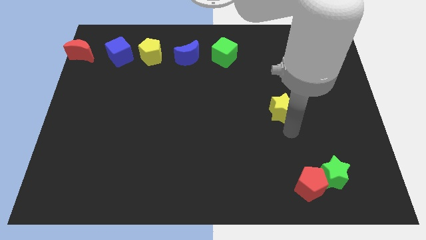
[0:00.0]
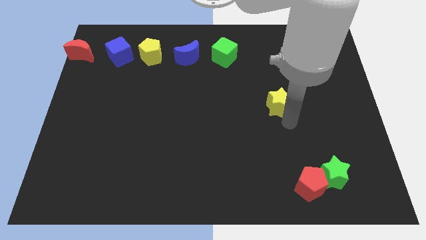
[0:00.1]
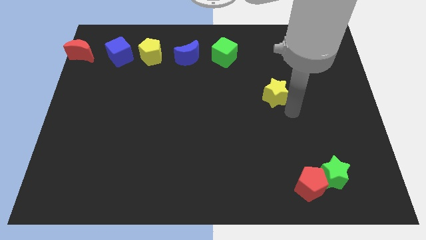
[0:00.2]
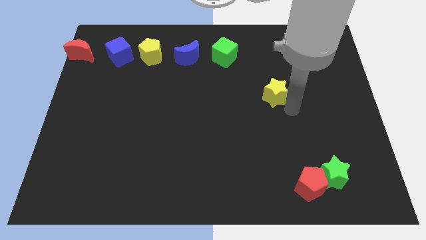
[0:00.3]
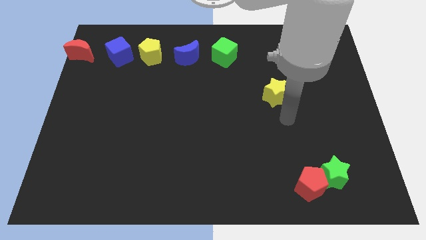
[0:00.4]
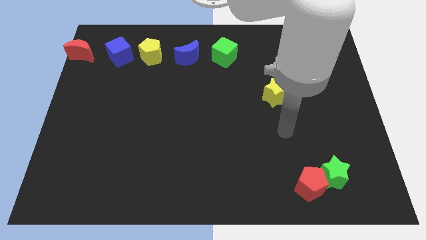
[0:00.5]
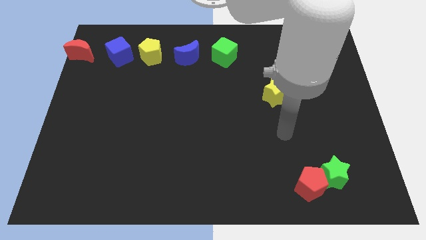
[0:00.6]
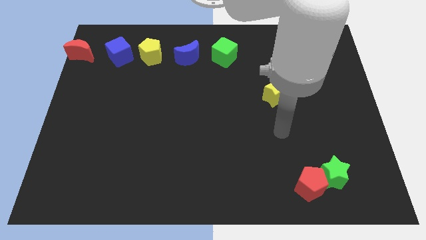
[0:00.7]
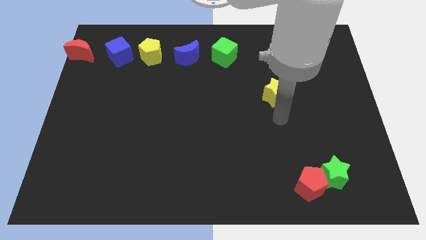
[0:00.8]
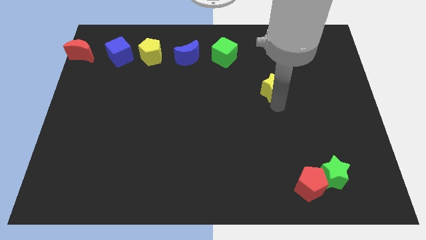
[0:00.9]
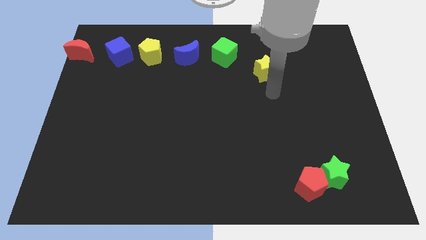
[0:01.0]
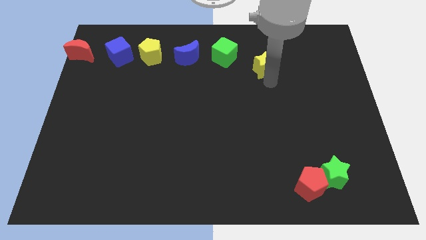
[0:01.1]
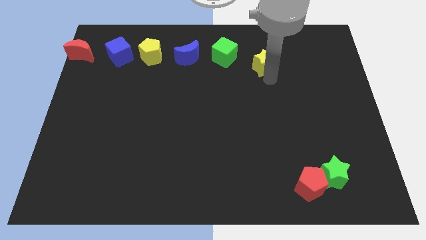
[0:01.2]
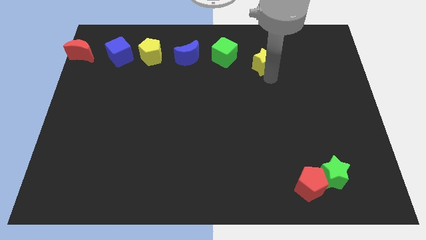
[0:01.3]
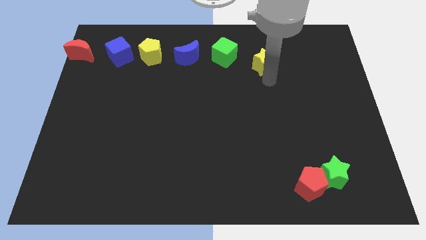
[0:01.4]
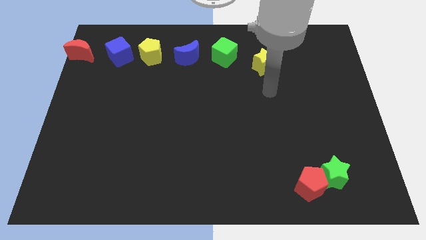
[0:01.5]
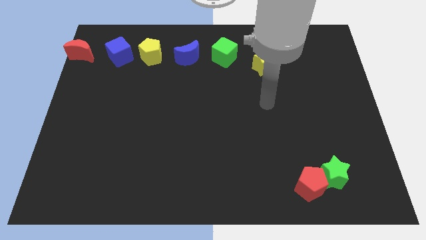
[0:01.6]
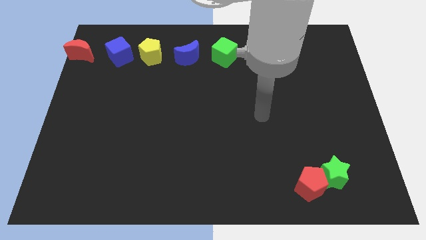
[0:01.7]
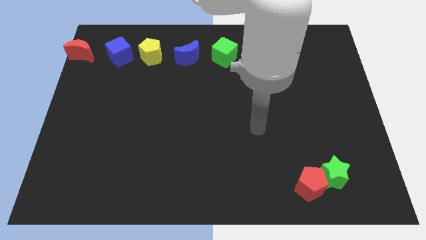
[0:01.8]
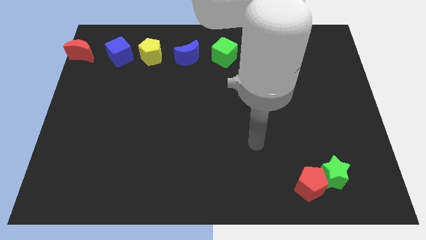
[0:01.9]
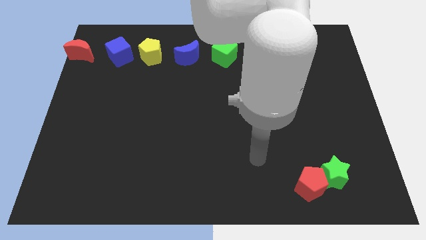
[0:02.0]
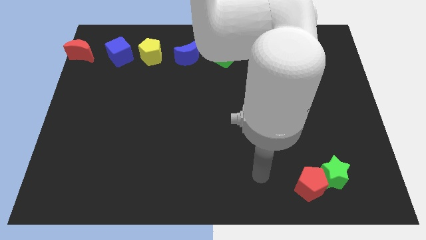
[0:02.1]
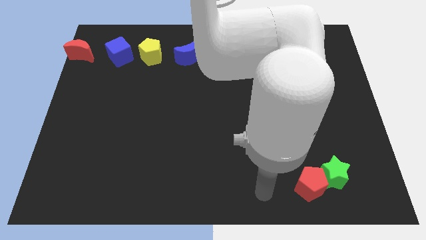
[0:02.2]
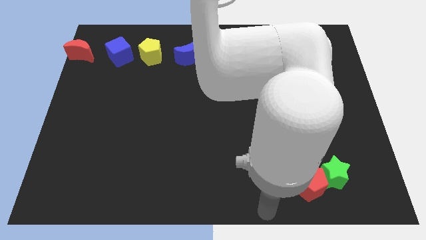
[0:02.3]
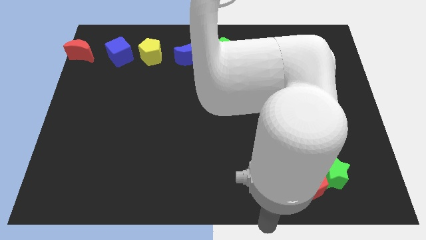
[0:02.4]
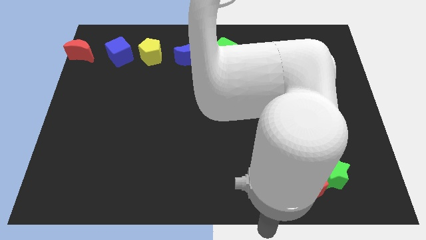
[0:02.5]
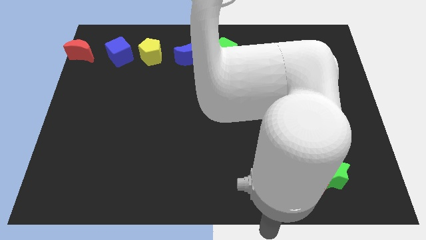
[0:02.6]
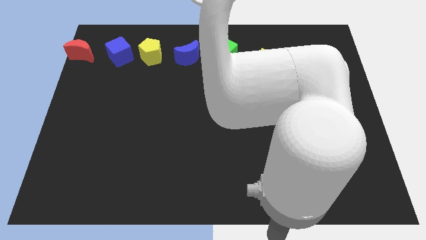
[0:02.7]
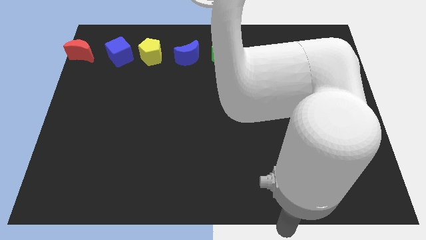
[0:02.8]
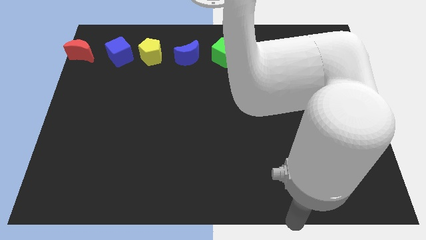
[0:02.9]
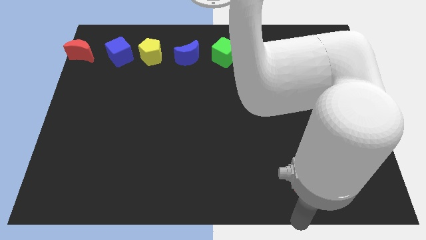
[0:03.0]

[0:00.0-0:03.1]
move the yellow star to the right side of the green cube

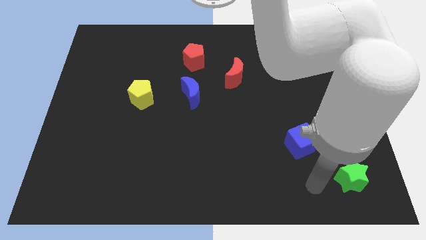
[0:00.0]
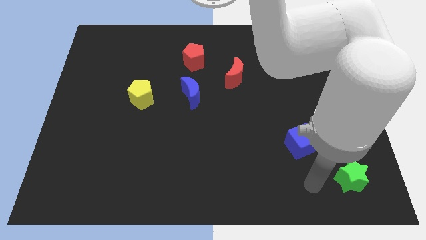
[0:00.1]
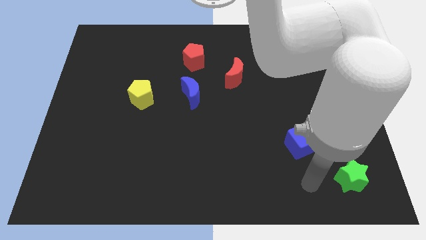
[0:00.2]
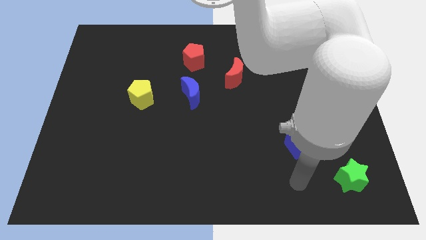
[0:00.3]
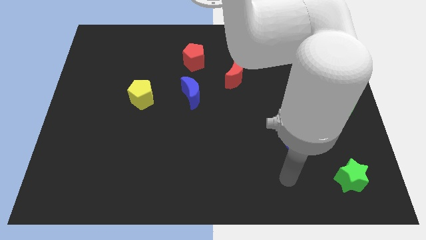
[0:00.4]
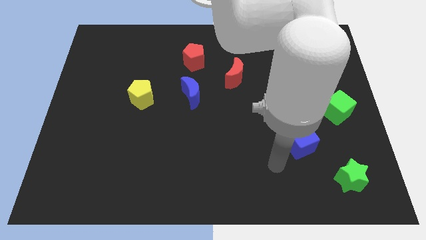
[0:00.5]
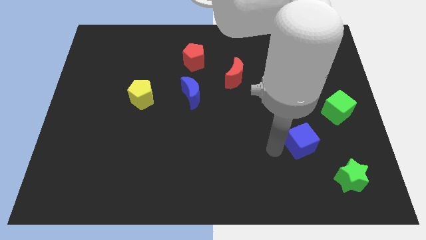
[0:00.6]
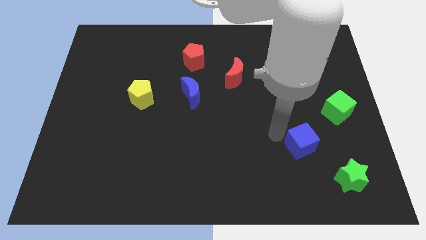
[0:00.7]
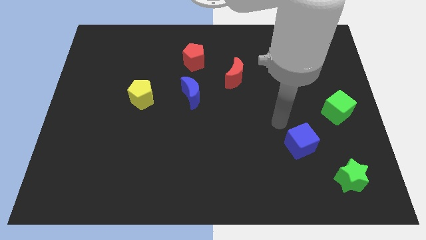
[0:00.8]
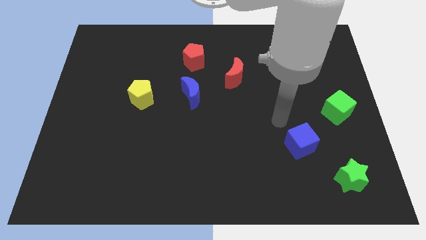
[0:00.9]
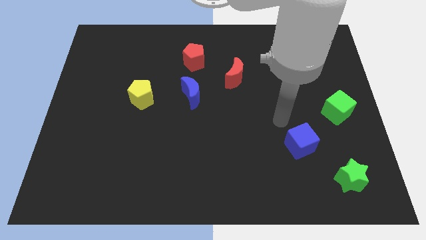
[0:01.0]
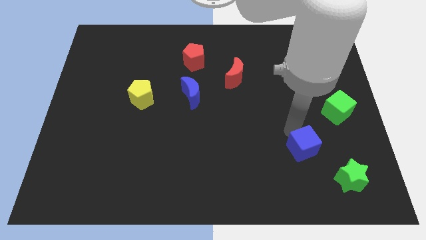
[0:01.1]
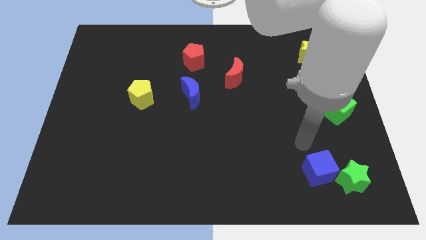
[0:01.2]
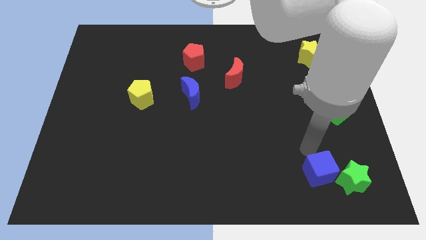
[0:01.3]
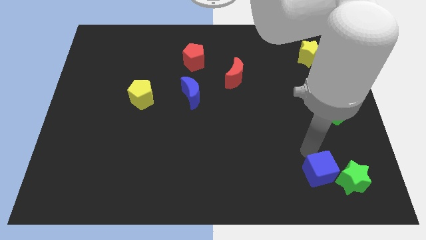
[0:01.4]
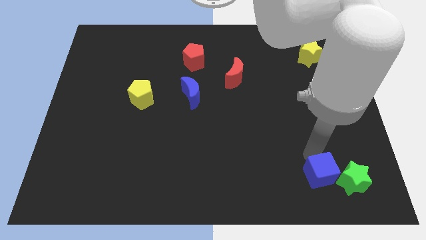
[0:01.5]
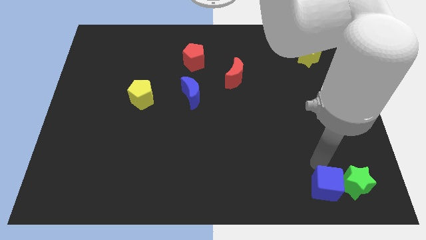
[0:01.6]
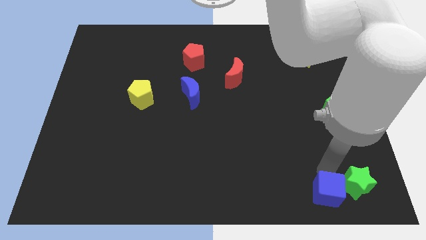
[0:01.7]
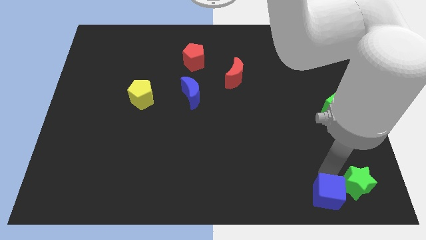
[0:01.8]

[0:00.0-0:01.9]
push the blue cube into green star

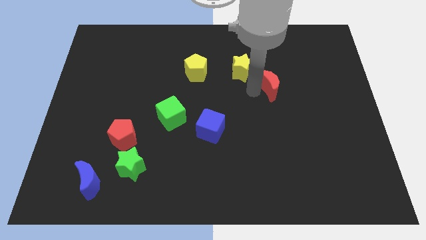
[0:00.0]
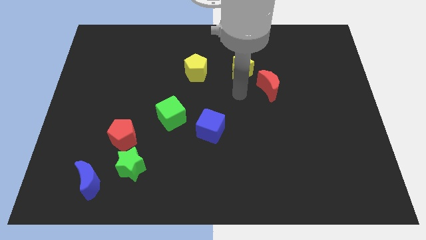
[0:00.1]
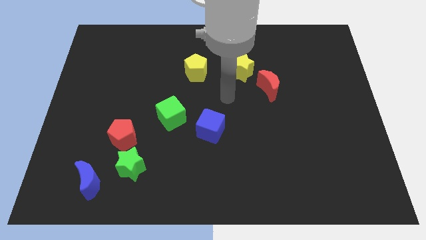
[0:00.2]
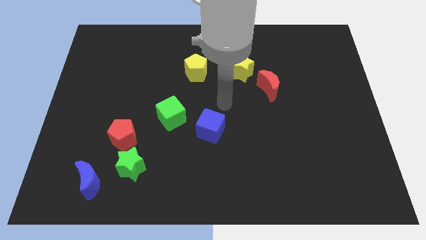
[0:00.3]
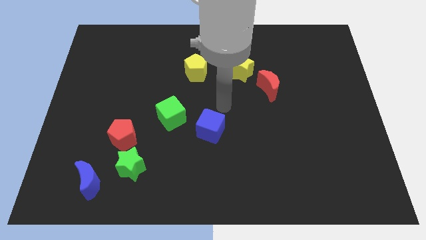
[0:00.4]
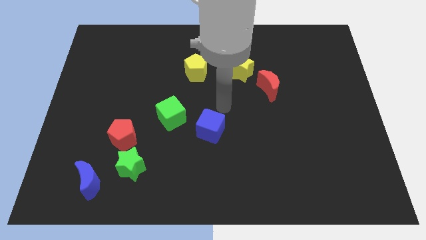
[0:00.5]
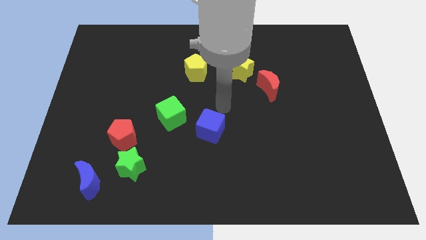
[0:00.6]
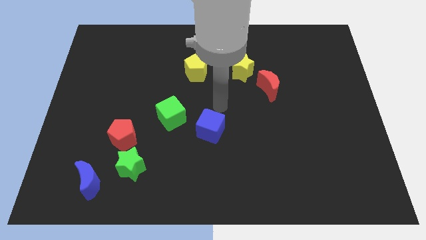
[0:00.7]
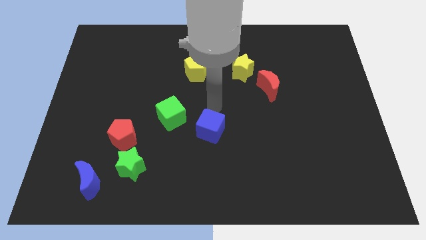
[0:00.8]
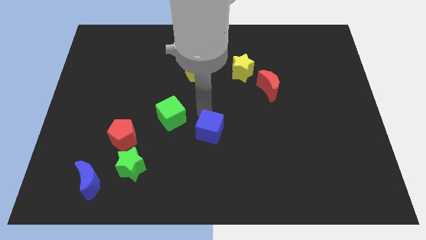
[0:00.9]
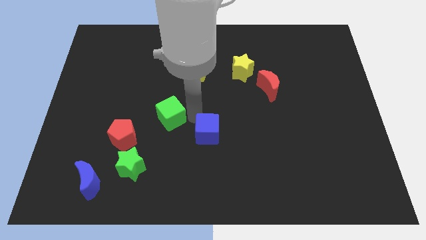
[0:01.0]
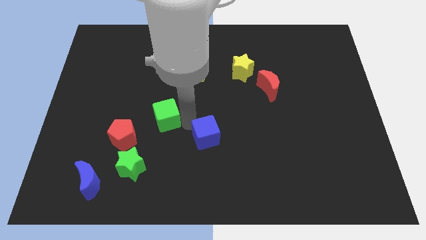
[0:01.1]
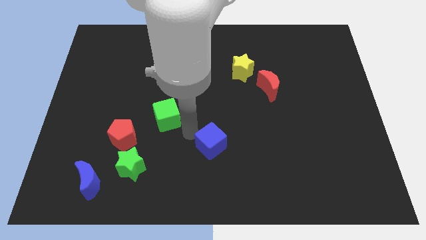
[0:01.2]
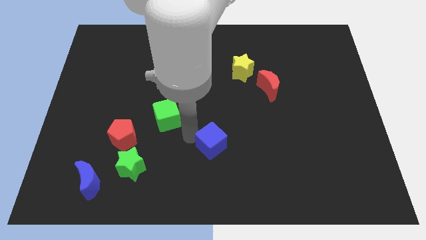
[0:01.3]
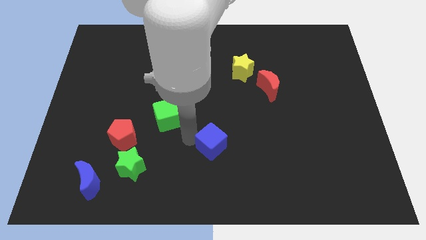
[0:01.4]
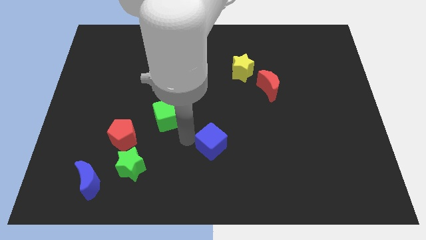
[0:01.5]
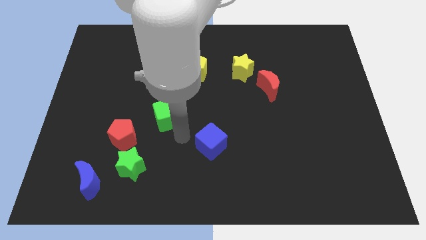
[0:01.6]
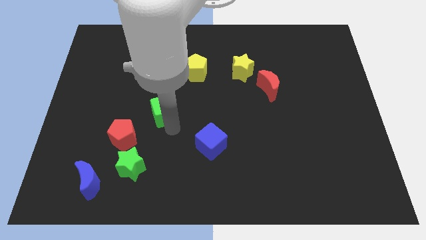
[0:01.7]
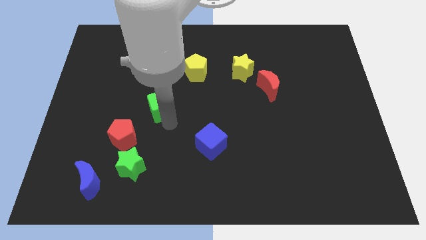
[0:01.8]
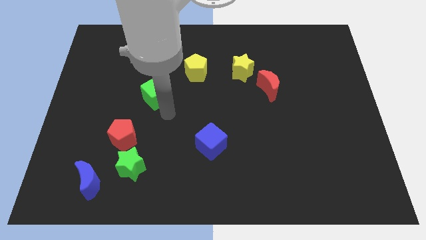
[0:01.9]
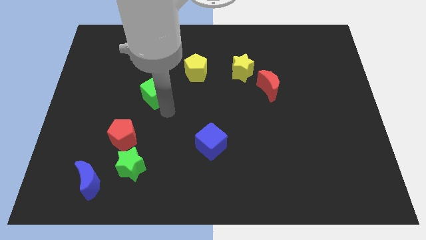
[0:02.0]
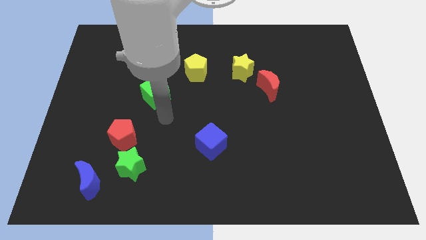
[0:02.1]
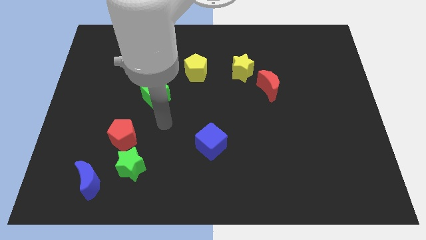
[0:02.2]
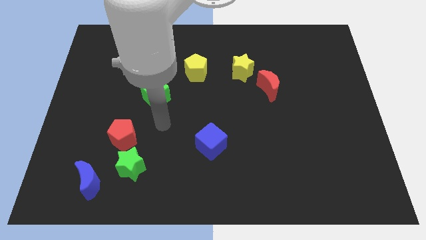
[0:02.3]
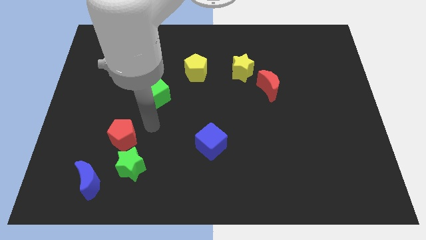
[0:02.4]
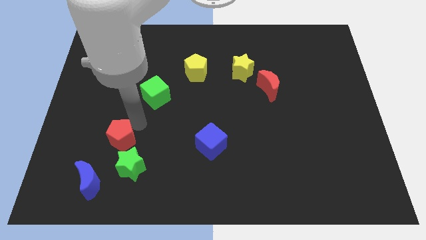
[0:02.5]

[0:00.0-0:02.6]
separate the green cube and the blue cube

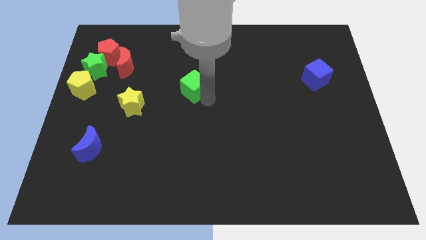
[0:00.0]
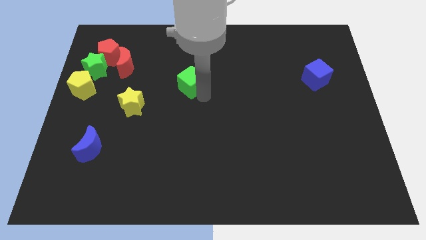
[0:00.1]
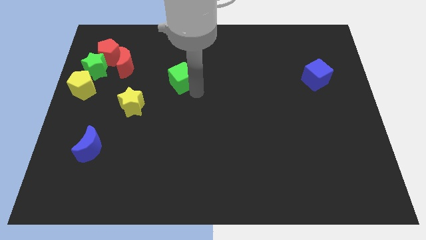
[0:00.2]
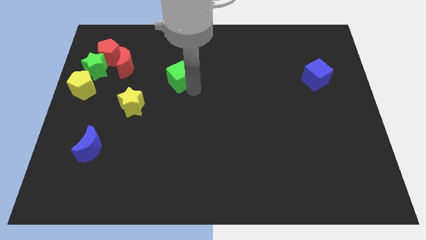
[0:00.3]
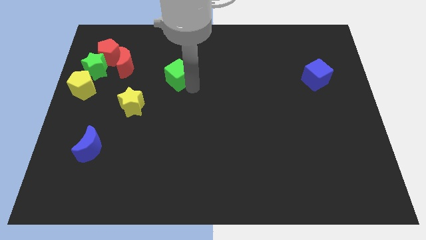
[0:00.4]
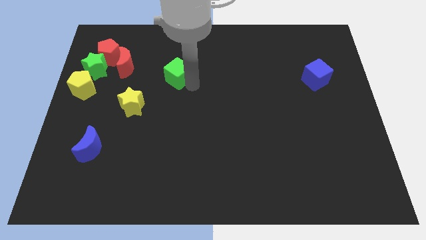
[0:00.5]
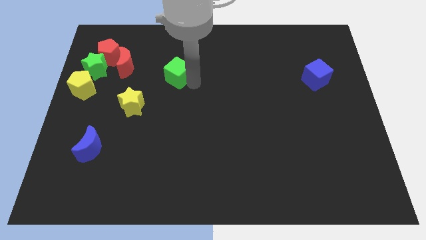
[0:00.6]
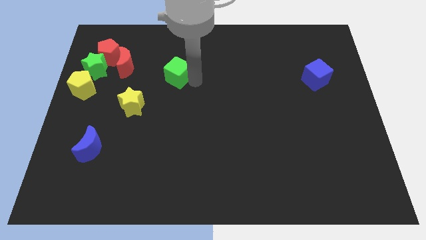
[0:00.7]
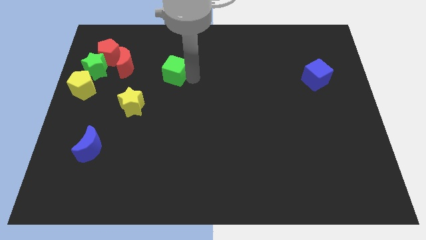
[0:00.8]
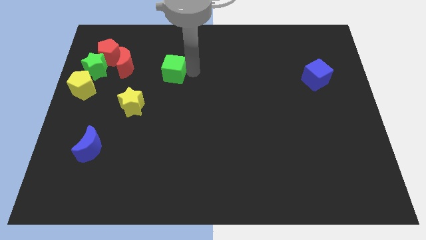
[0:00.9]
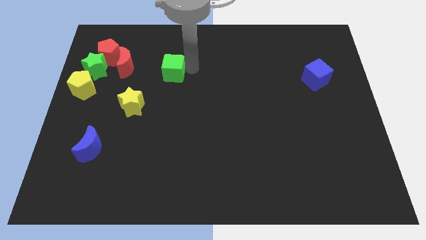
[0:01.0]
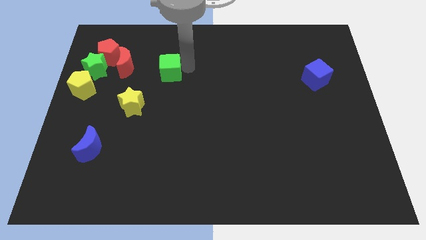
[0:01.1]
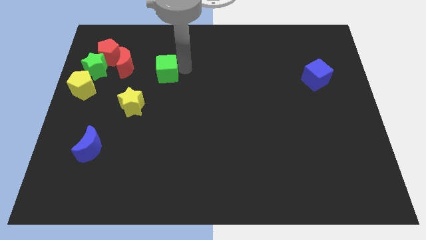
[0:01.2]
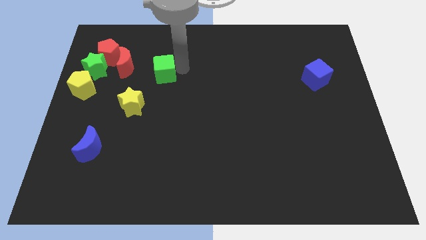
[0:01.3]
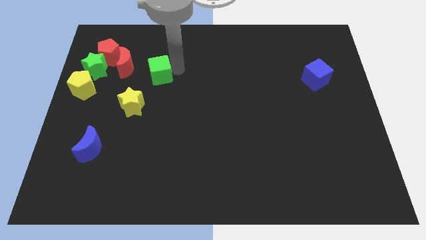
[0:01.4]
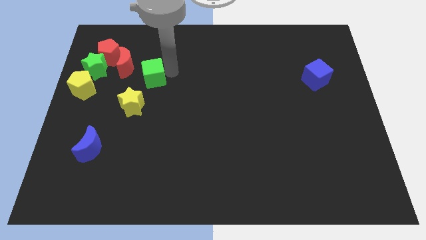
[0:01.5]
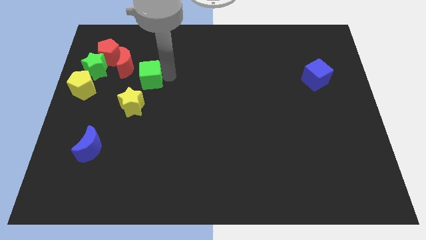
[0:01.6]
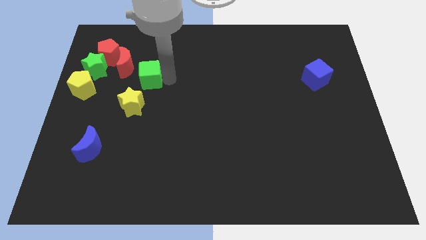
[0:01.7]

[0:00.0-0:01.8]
slide the green cube towards the top side of the yellow star
